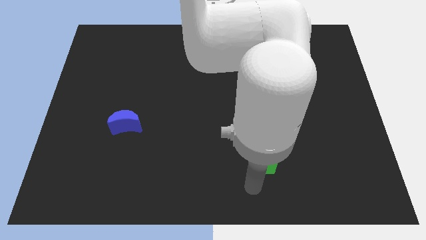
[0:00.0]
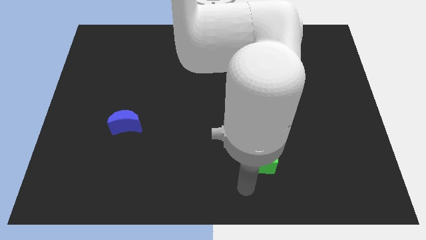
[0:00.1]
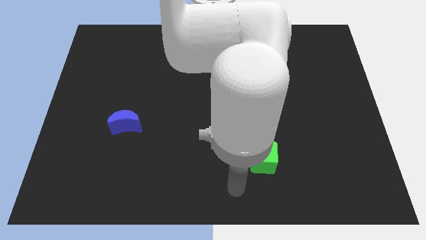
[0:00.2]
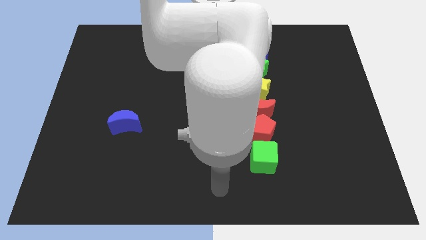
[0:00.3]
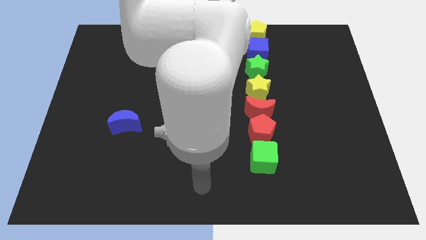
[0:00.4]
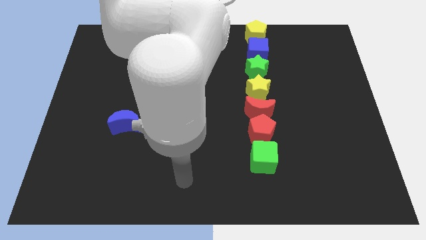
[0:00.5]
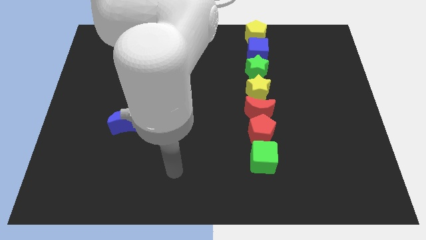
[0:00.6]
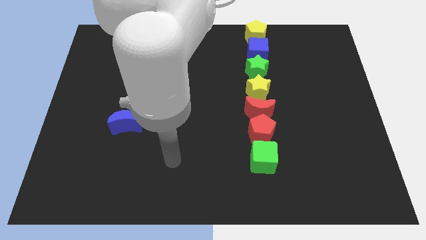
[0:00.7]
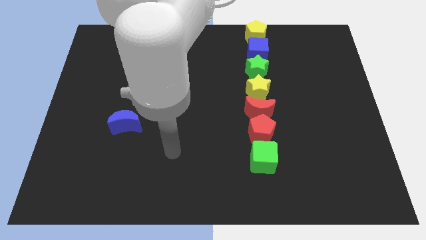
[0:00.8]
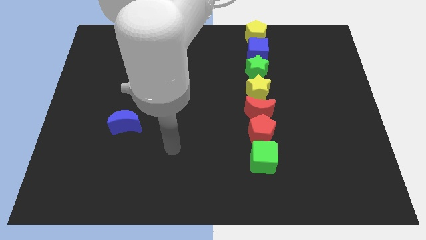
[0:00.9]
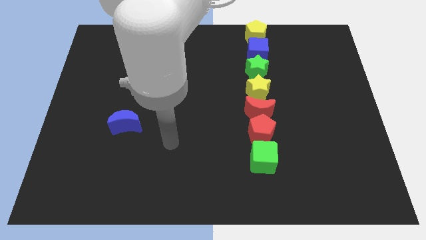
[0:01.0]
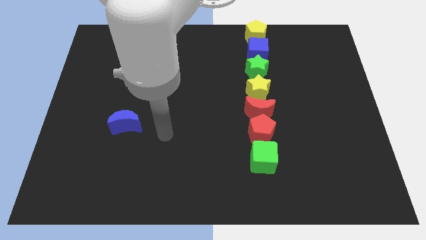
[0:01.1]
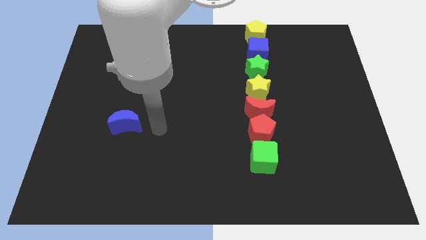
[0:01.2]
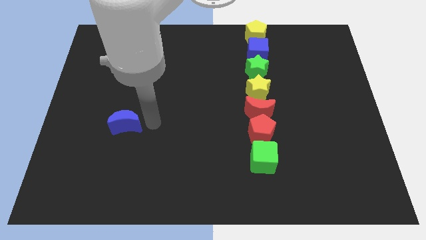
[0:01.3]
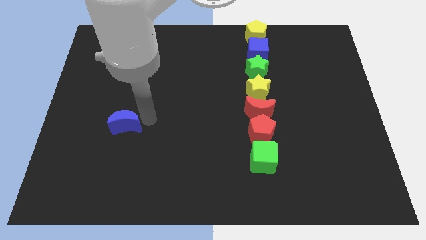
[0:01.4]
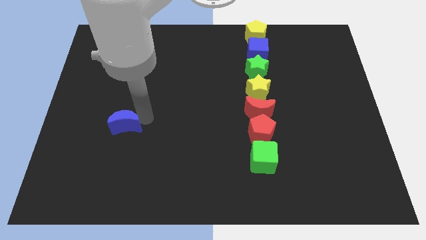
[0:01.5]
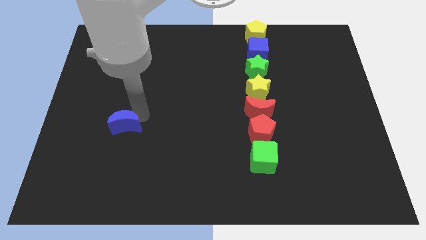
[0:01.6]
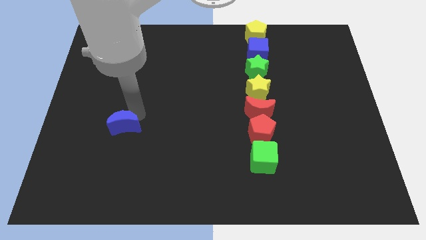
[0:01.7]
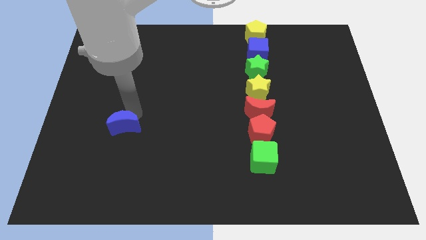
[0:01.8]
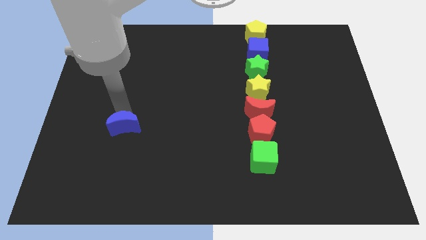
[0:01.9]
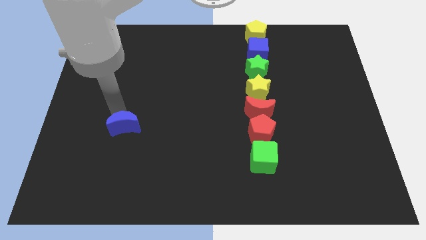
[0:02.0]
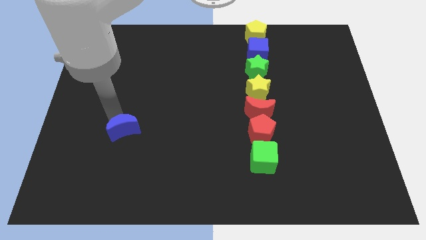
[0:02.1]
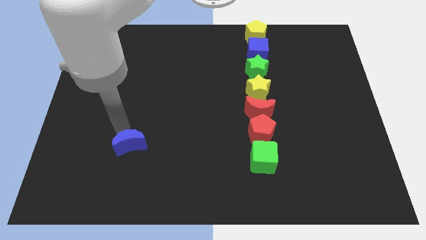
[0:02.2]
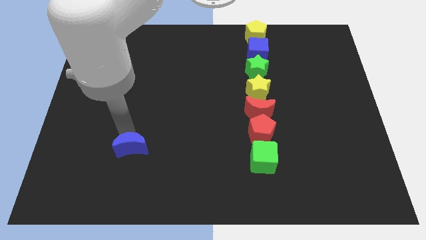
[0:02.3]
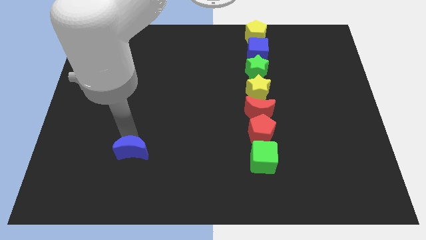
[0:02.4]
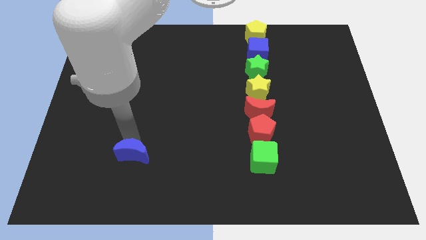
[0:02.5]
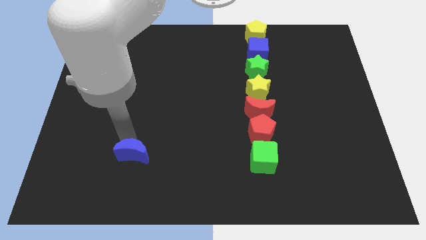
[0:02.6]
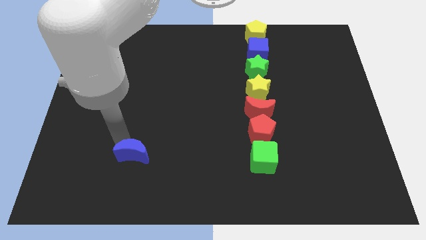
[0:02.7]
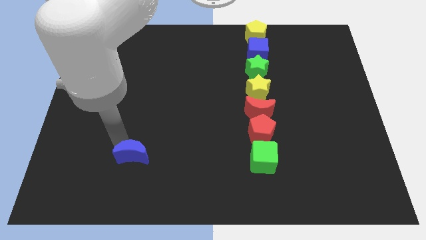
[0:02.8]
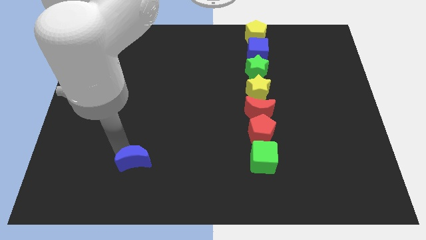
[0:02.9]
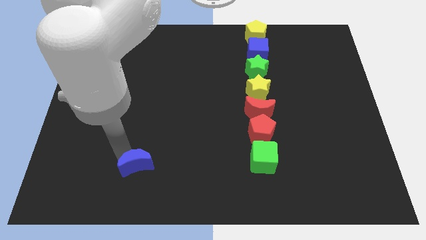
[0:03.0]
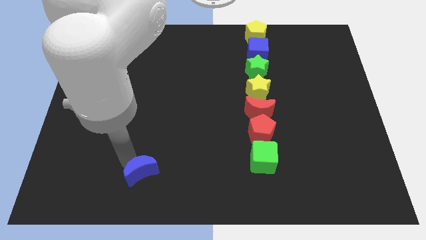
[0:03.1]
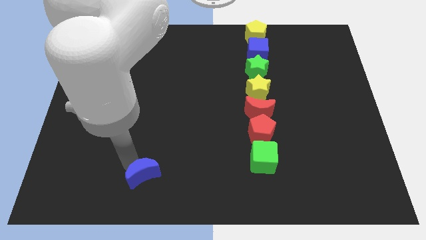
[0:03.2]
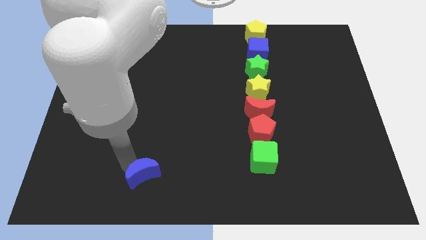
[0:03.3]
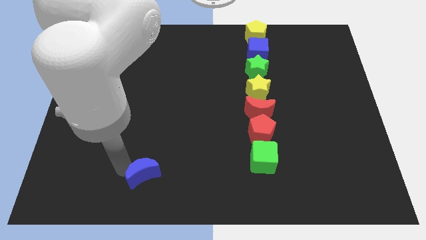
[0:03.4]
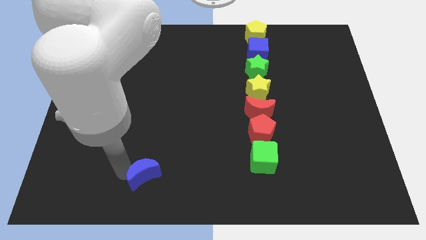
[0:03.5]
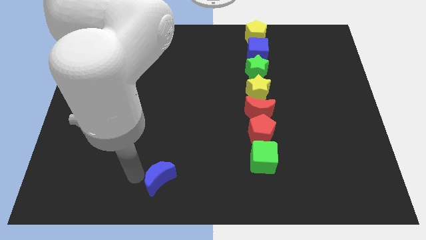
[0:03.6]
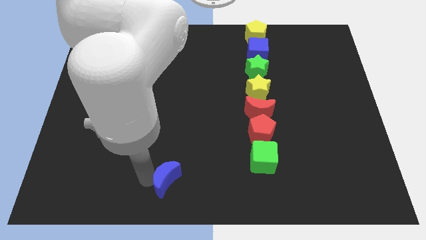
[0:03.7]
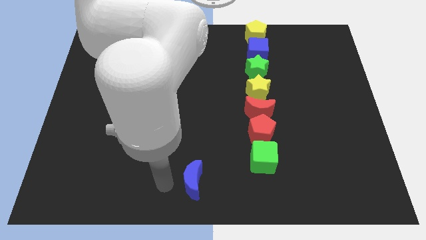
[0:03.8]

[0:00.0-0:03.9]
push the blue crescent towards the vertical line of blocks

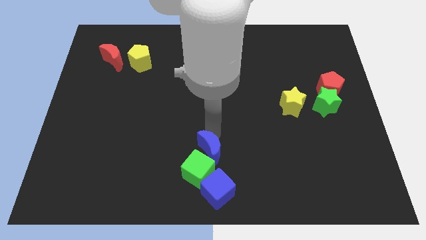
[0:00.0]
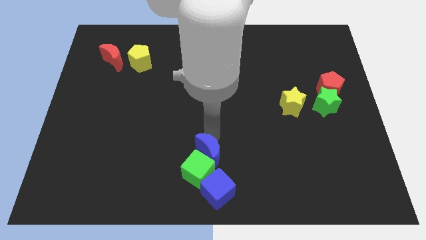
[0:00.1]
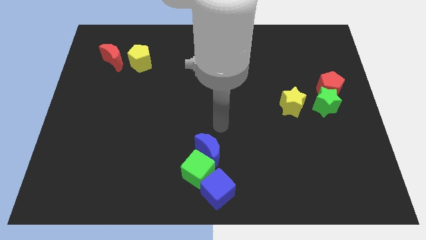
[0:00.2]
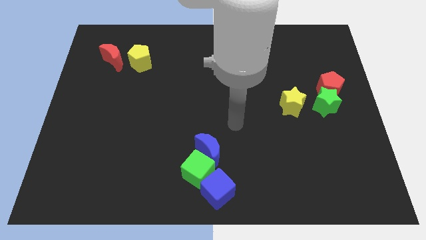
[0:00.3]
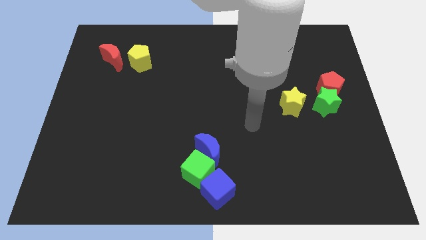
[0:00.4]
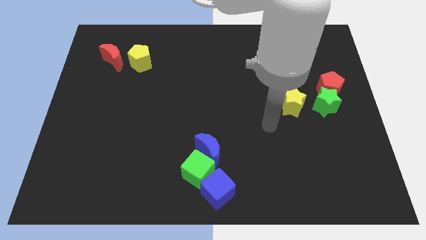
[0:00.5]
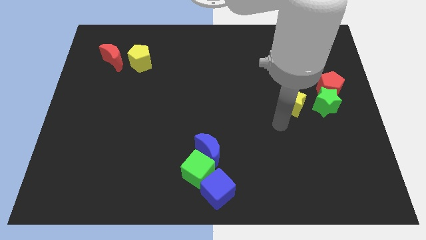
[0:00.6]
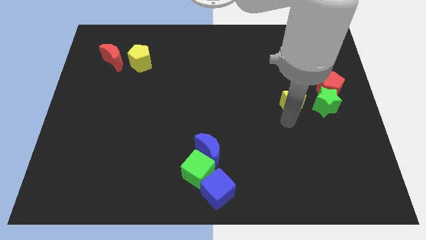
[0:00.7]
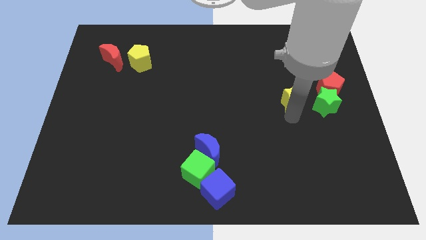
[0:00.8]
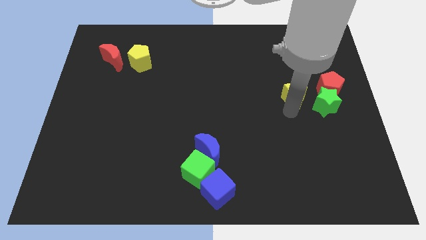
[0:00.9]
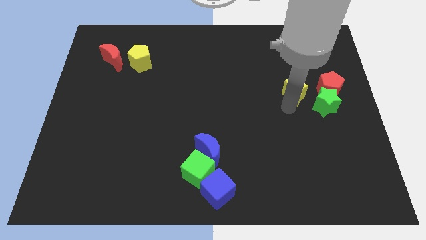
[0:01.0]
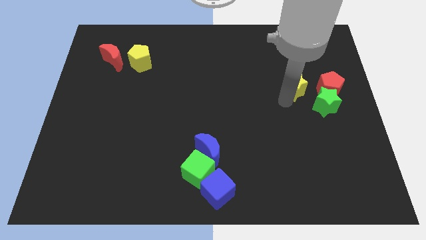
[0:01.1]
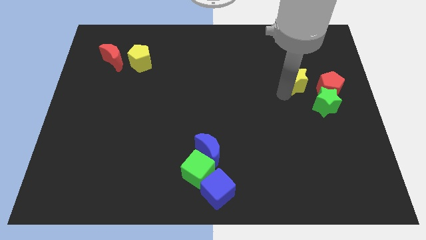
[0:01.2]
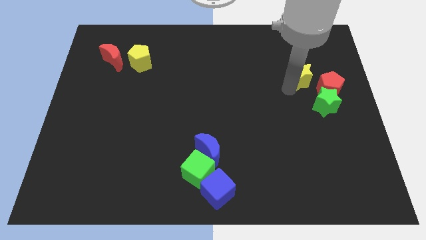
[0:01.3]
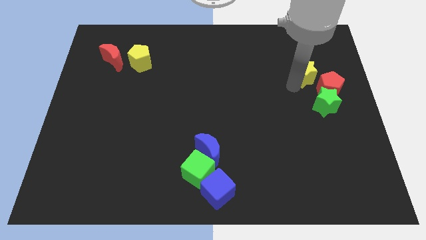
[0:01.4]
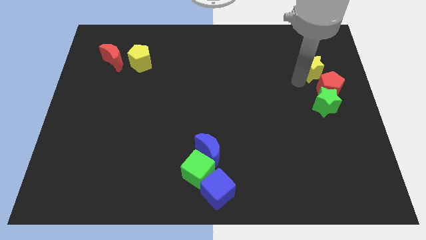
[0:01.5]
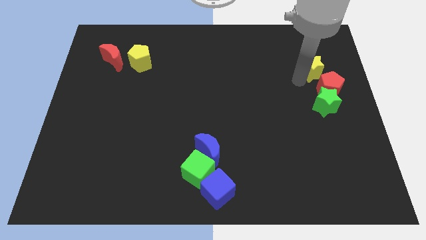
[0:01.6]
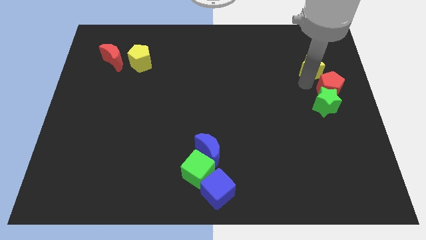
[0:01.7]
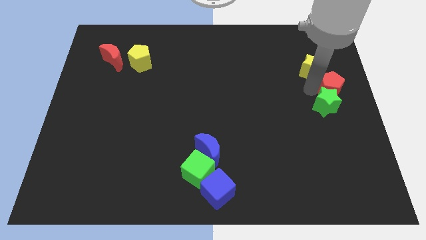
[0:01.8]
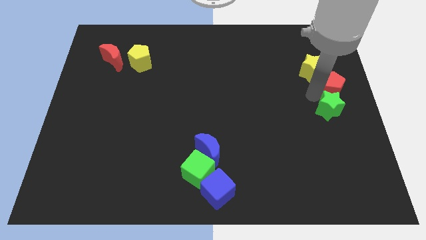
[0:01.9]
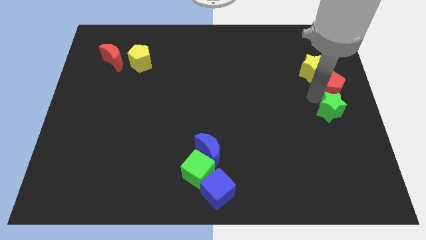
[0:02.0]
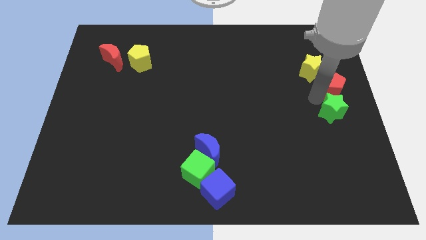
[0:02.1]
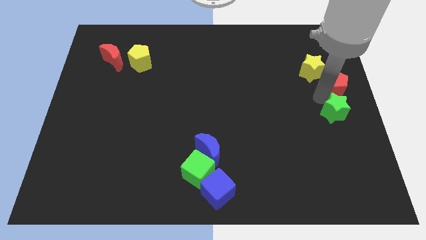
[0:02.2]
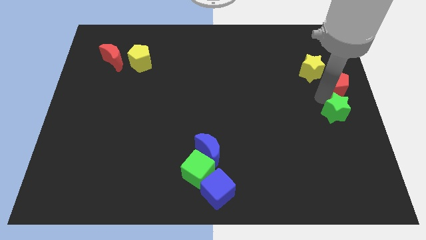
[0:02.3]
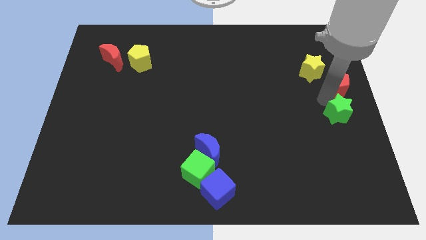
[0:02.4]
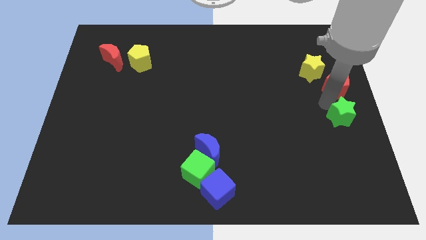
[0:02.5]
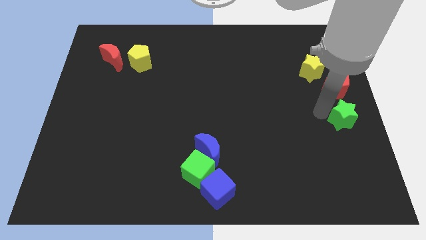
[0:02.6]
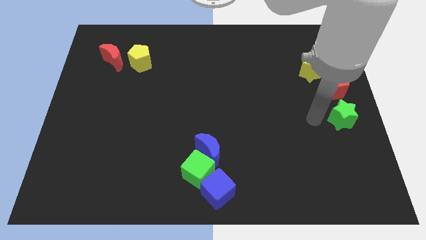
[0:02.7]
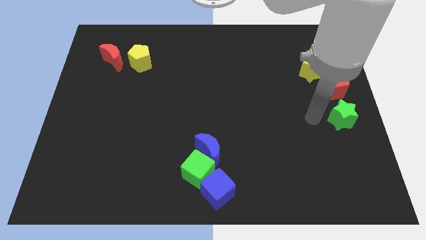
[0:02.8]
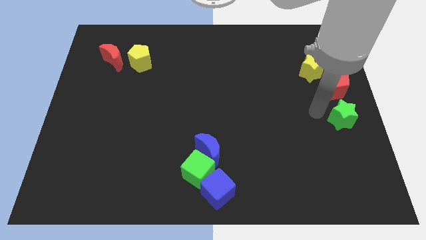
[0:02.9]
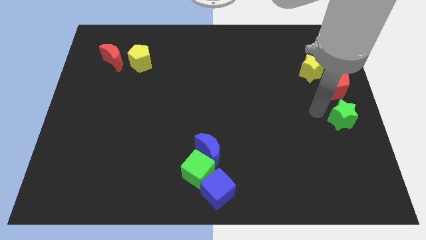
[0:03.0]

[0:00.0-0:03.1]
move the yellow star slightly towards the top right

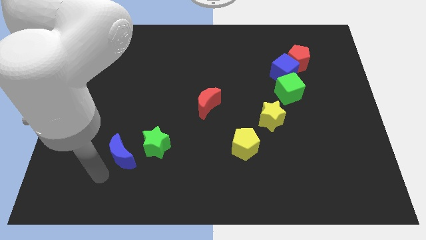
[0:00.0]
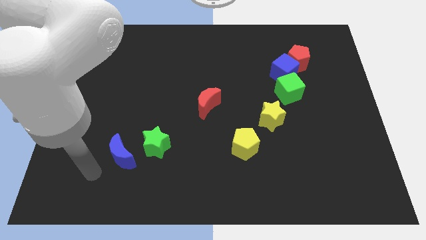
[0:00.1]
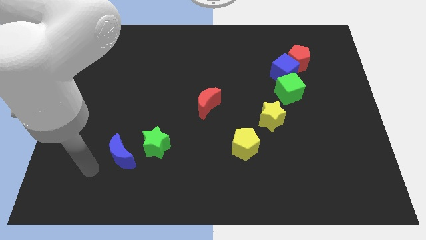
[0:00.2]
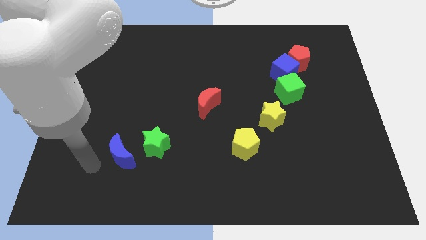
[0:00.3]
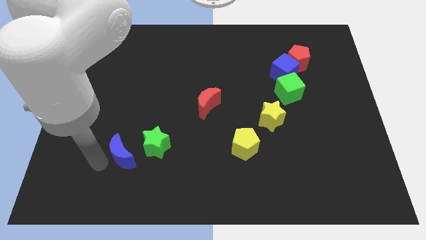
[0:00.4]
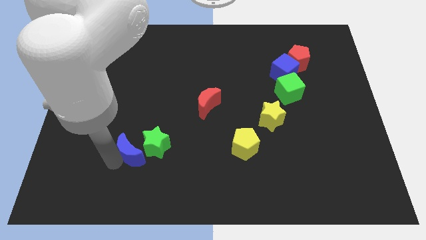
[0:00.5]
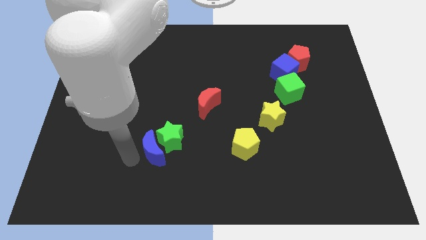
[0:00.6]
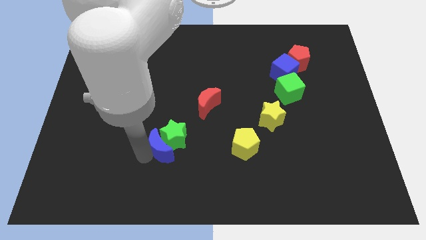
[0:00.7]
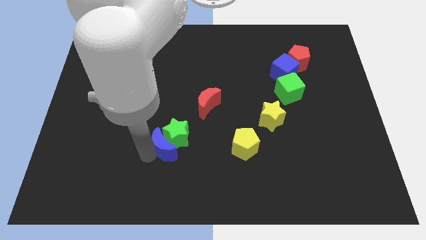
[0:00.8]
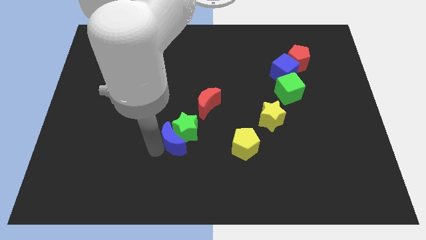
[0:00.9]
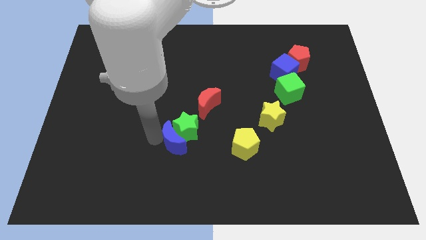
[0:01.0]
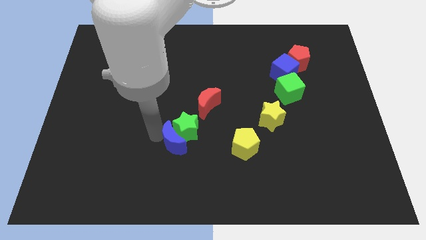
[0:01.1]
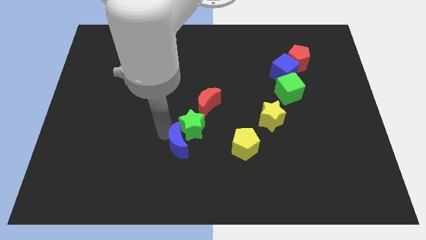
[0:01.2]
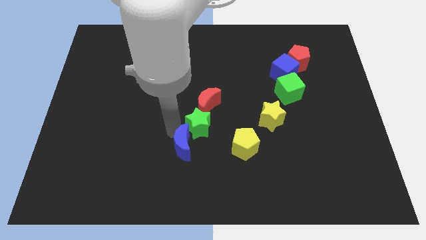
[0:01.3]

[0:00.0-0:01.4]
push the blue crescent into the green star

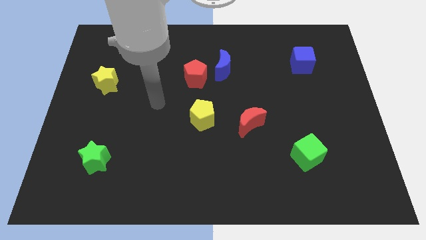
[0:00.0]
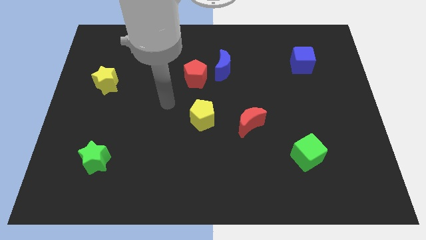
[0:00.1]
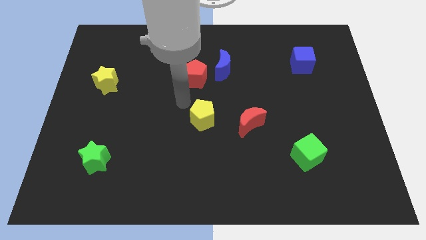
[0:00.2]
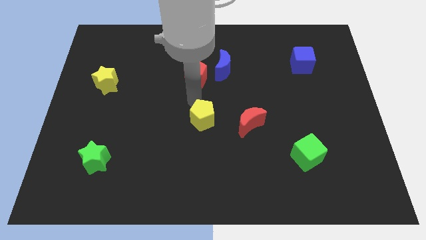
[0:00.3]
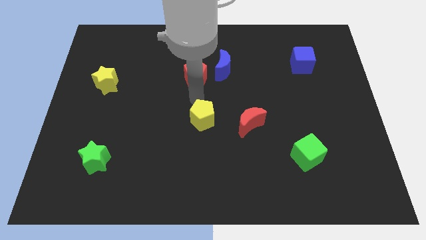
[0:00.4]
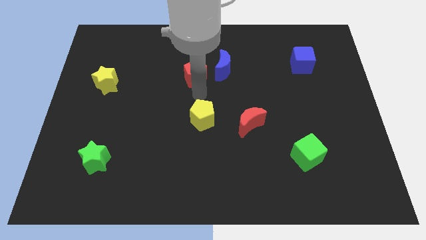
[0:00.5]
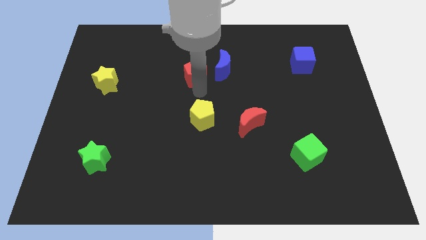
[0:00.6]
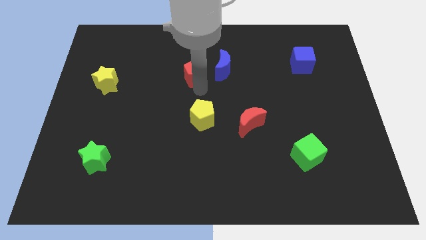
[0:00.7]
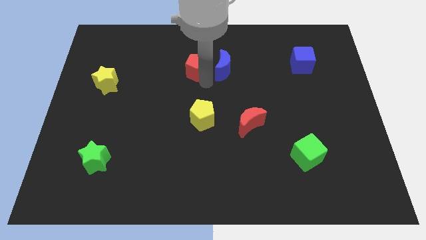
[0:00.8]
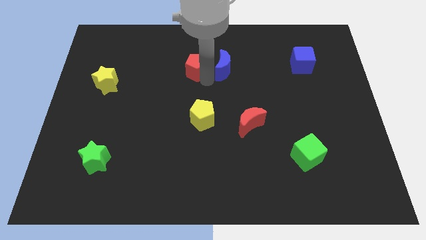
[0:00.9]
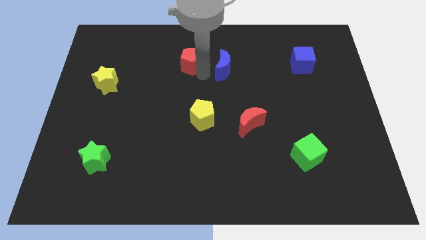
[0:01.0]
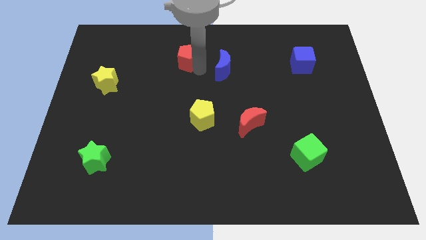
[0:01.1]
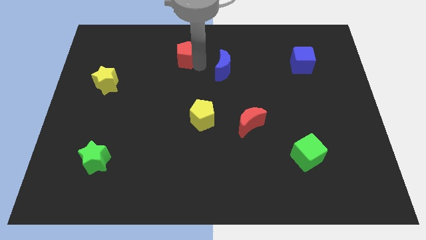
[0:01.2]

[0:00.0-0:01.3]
move the red pentagon slightly upwards
